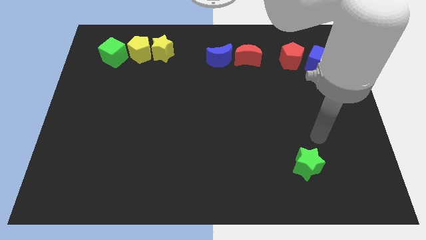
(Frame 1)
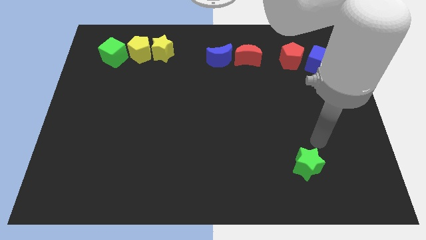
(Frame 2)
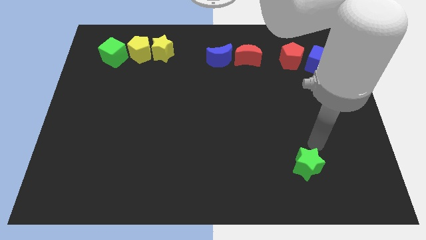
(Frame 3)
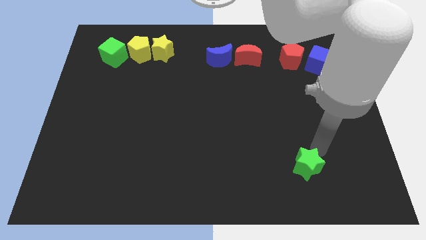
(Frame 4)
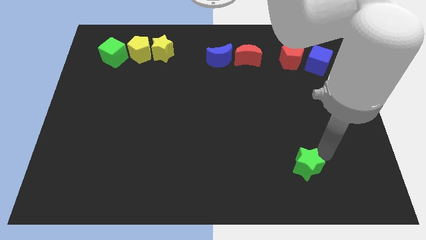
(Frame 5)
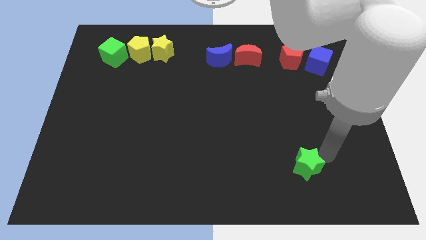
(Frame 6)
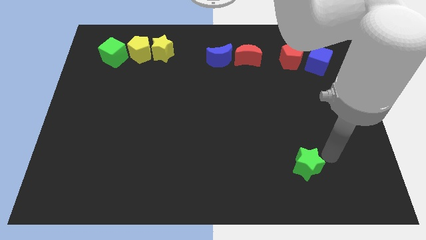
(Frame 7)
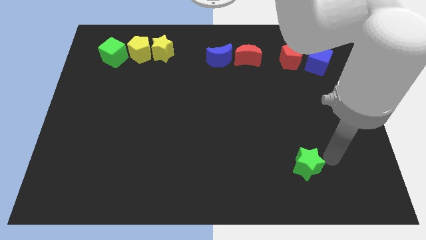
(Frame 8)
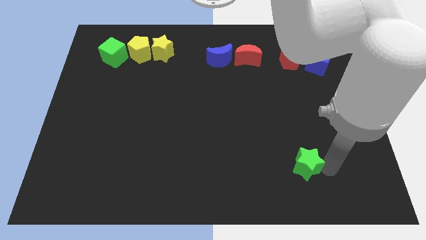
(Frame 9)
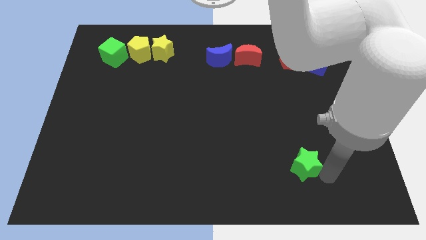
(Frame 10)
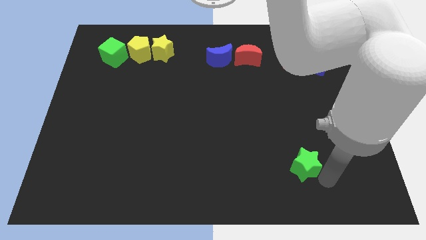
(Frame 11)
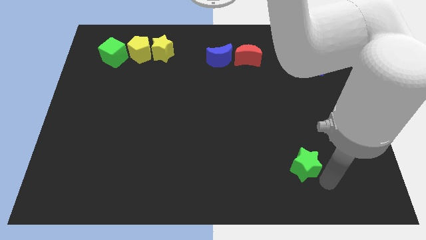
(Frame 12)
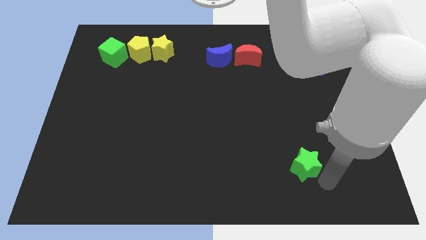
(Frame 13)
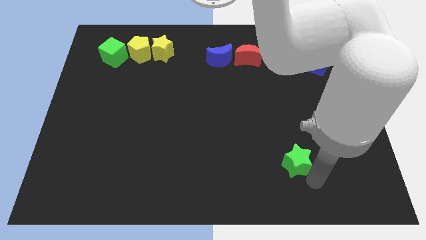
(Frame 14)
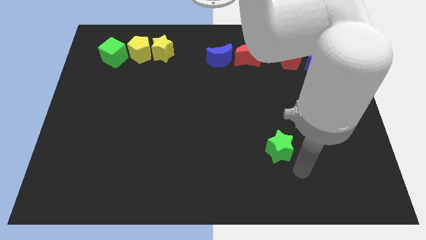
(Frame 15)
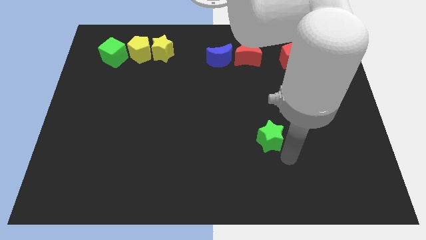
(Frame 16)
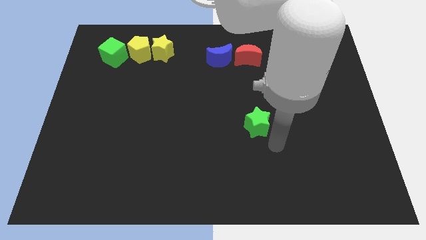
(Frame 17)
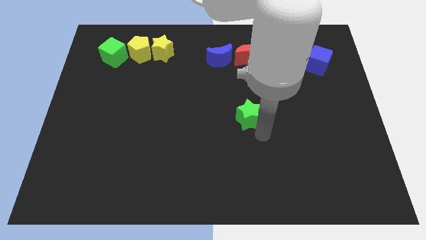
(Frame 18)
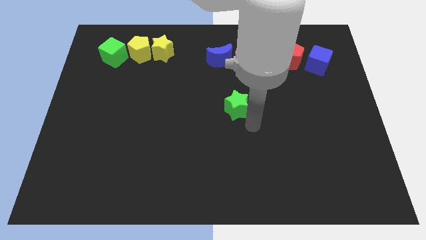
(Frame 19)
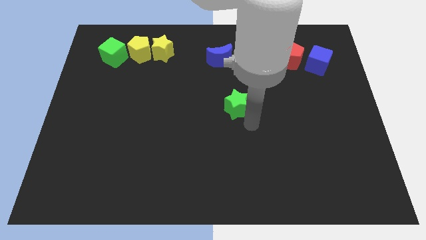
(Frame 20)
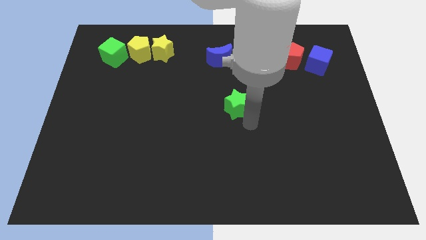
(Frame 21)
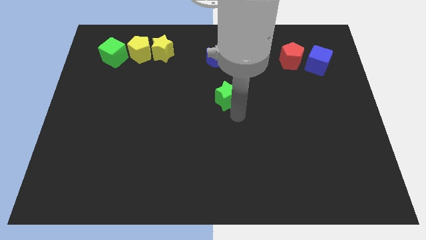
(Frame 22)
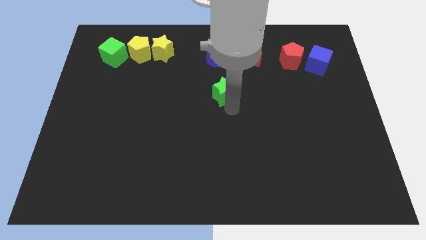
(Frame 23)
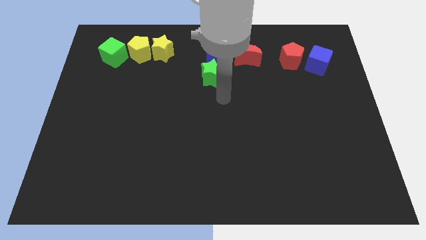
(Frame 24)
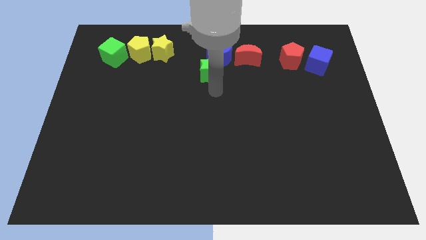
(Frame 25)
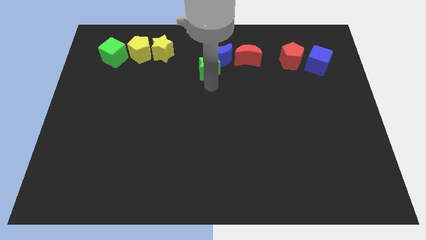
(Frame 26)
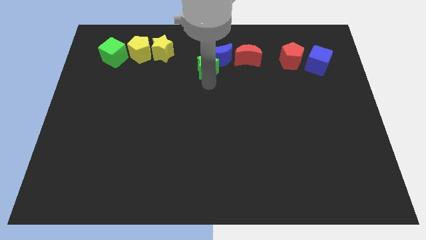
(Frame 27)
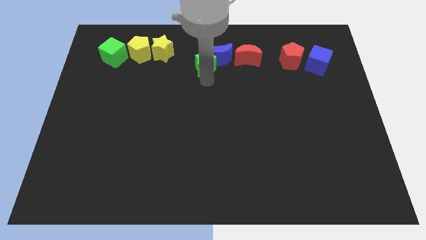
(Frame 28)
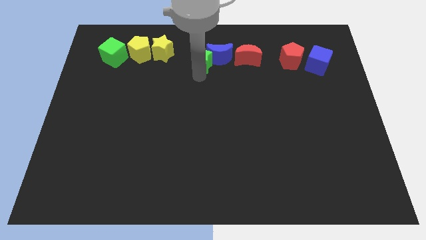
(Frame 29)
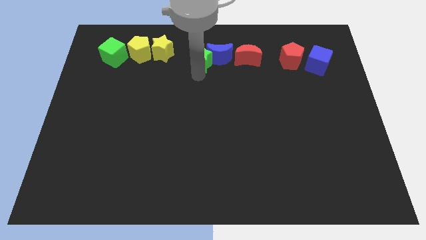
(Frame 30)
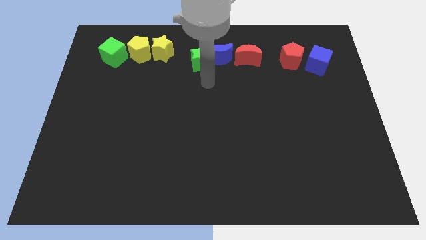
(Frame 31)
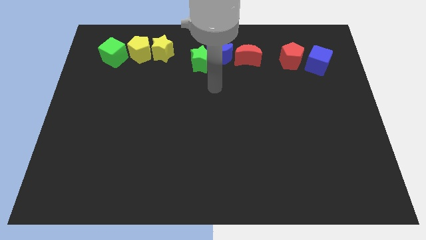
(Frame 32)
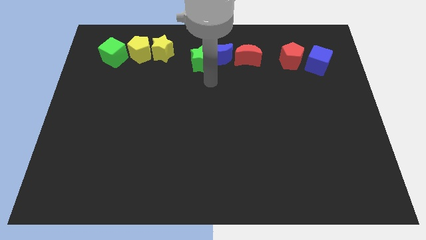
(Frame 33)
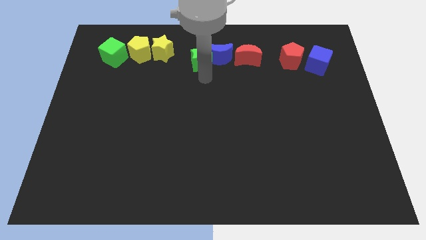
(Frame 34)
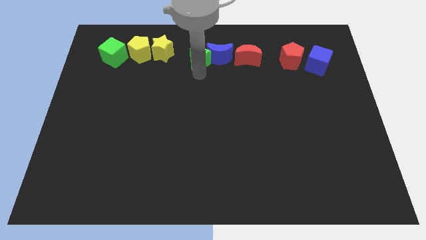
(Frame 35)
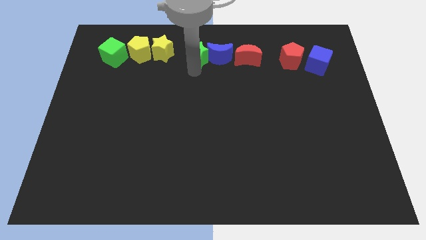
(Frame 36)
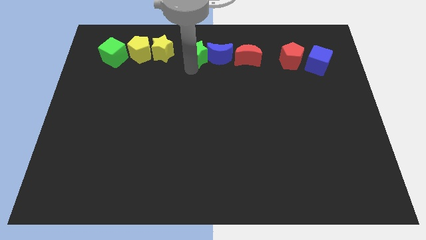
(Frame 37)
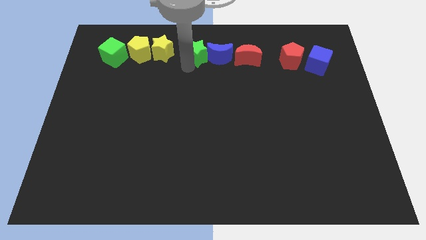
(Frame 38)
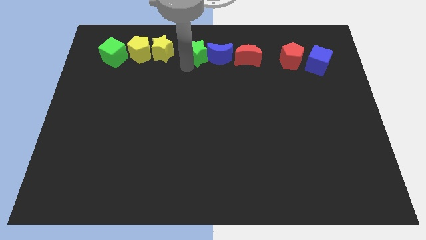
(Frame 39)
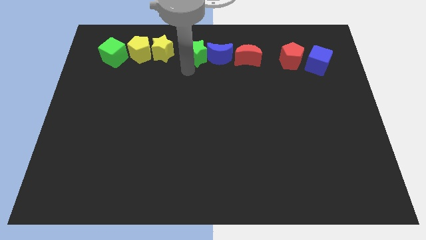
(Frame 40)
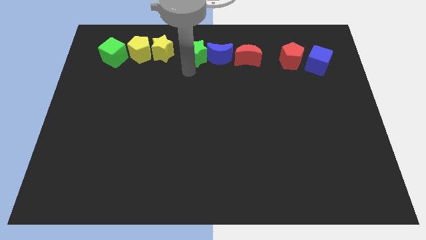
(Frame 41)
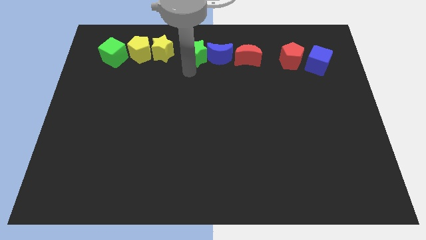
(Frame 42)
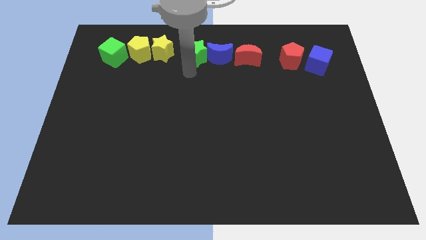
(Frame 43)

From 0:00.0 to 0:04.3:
push the green star to the left side of the blue moon

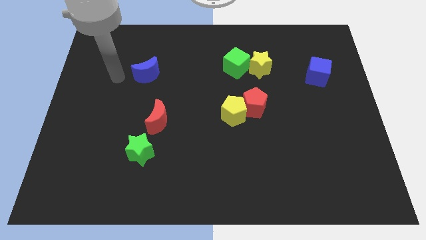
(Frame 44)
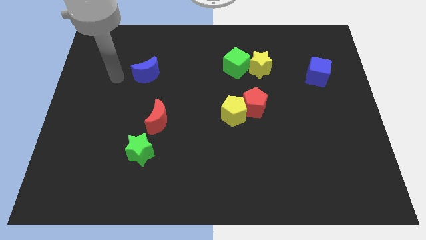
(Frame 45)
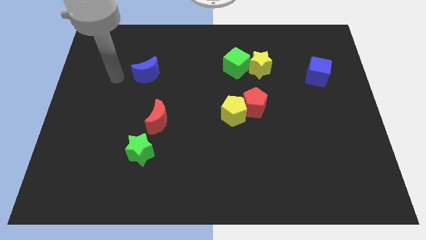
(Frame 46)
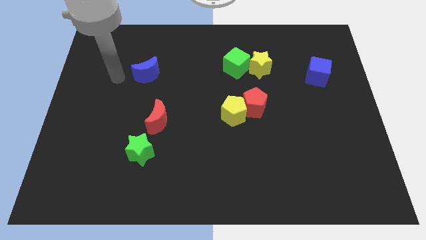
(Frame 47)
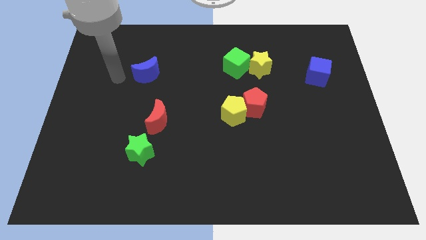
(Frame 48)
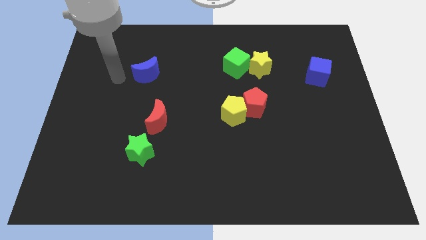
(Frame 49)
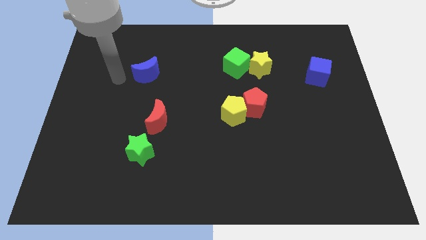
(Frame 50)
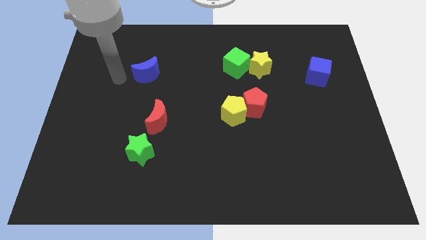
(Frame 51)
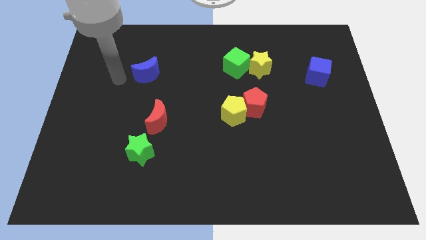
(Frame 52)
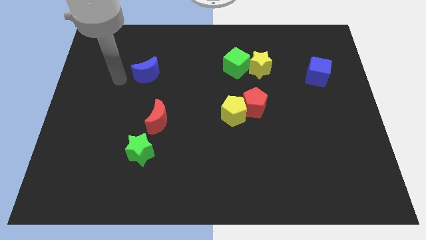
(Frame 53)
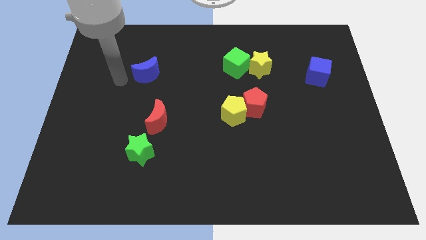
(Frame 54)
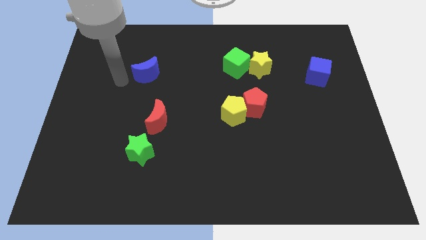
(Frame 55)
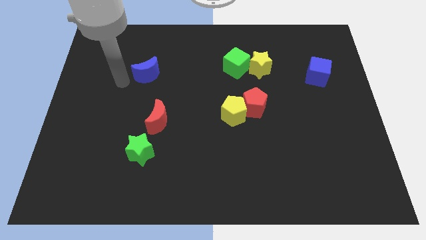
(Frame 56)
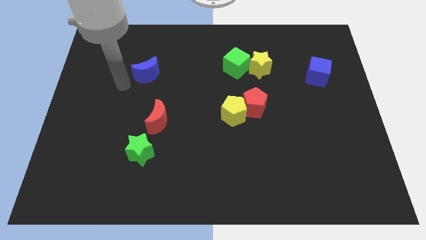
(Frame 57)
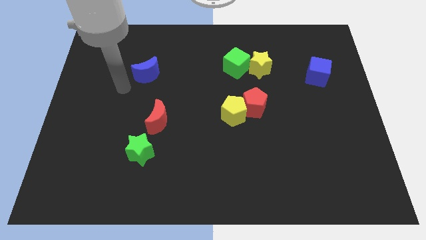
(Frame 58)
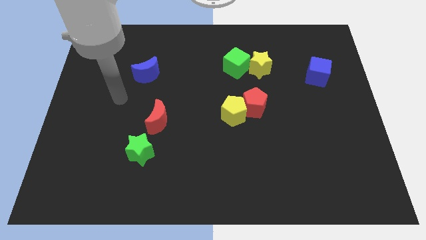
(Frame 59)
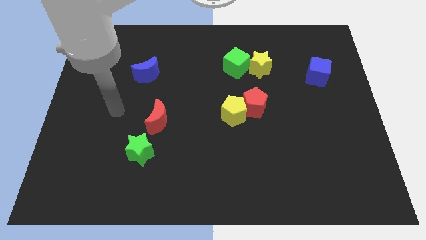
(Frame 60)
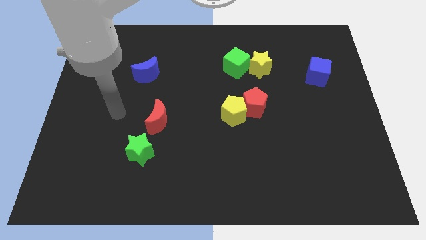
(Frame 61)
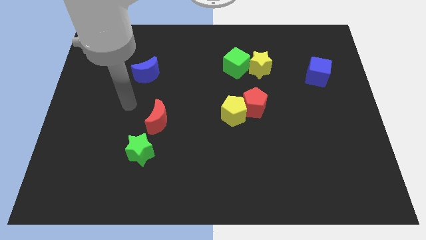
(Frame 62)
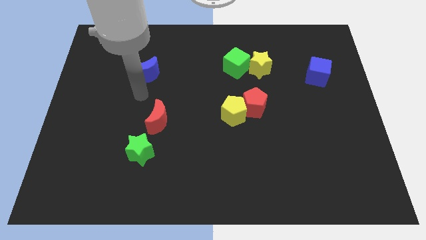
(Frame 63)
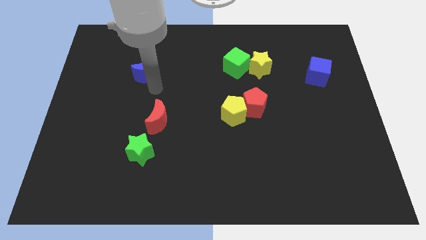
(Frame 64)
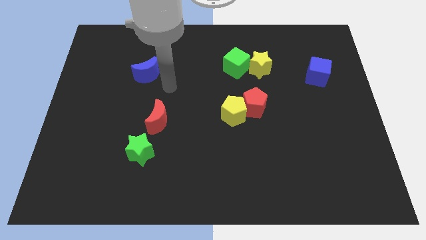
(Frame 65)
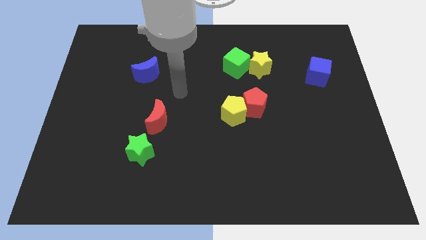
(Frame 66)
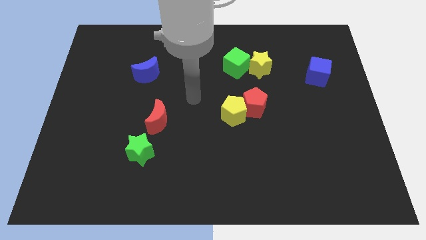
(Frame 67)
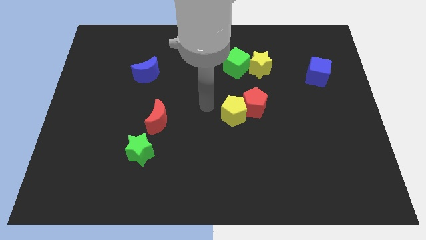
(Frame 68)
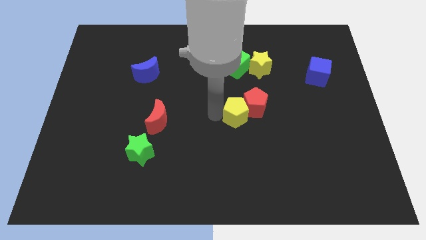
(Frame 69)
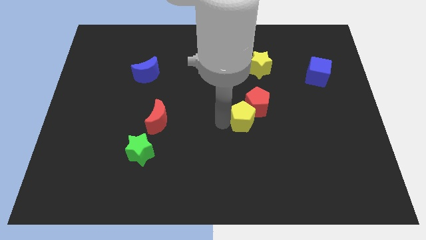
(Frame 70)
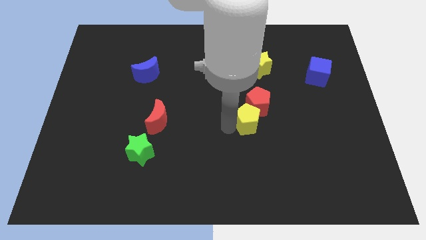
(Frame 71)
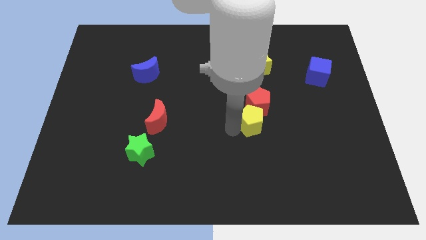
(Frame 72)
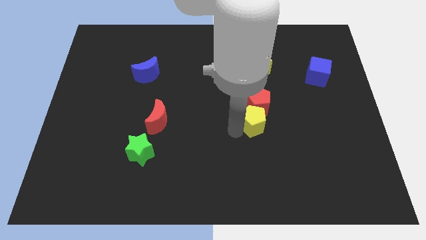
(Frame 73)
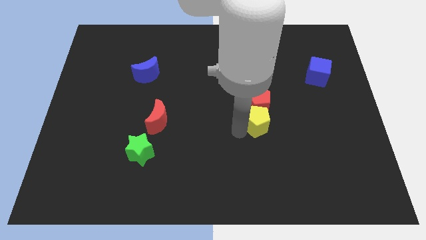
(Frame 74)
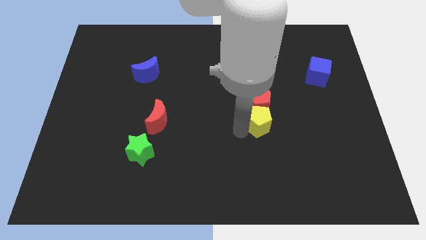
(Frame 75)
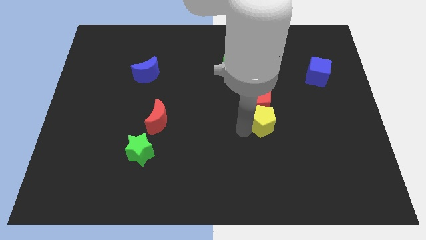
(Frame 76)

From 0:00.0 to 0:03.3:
move the yellow pentagon at the bottom side of the red pentagon

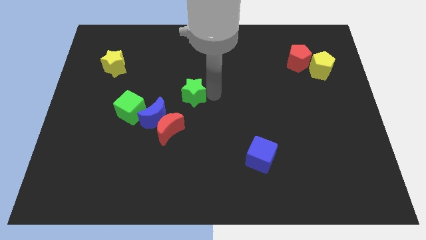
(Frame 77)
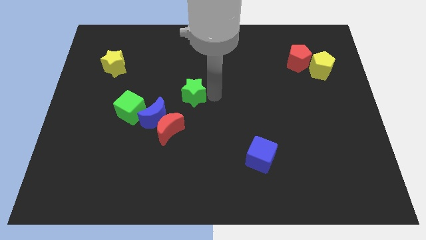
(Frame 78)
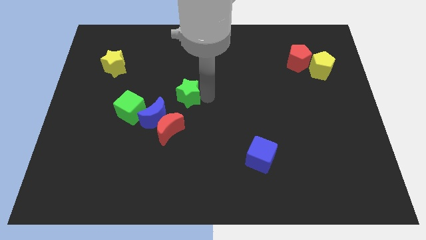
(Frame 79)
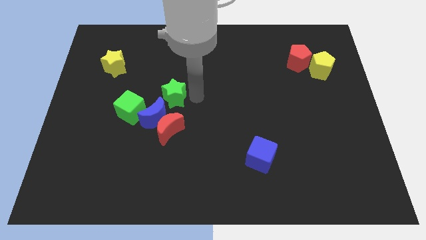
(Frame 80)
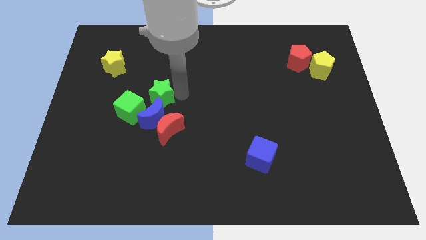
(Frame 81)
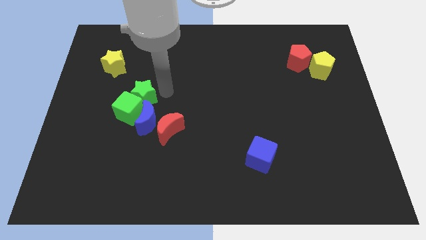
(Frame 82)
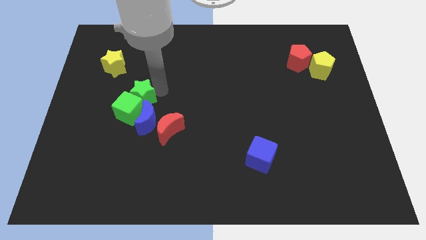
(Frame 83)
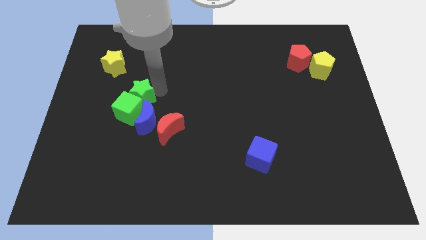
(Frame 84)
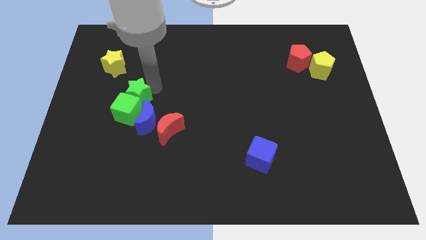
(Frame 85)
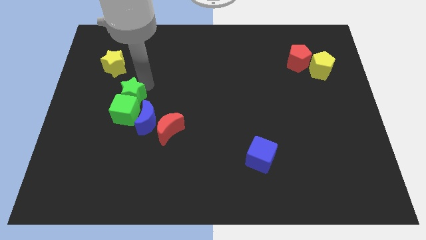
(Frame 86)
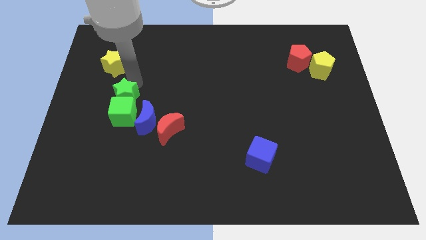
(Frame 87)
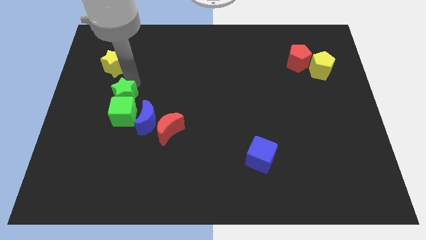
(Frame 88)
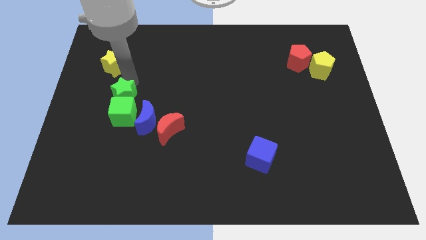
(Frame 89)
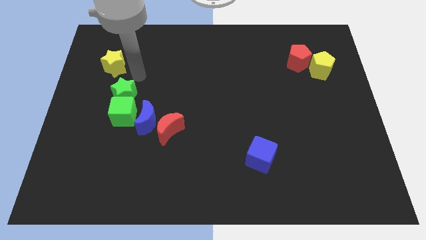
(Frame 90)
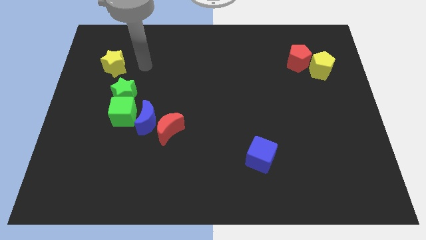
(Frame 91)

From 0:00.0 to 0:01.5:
push the green star top of the green cube
